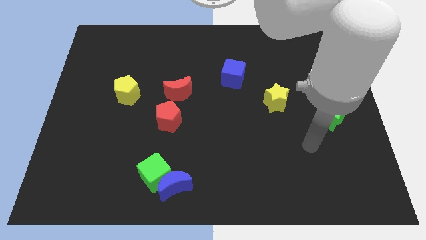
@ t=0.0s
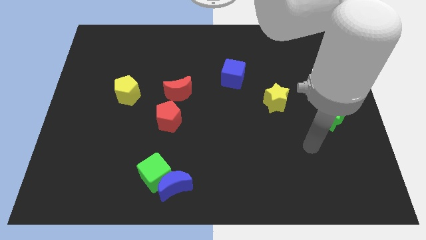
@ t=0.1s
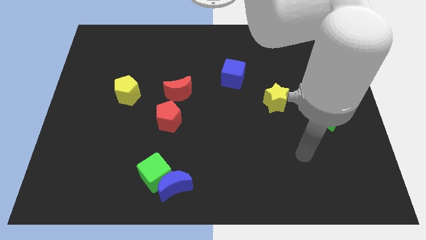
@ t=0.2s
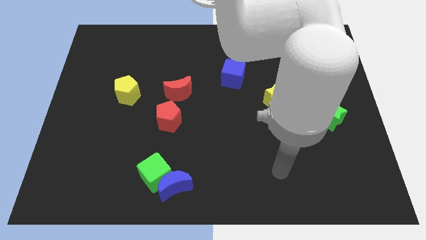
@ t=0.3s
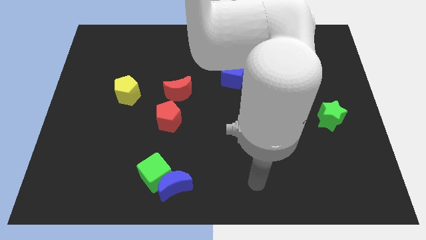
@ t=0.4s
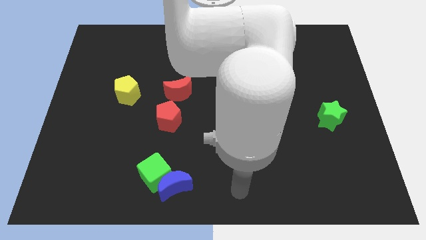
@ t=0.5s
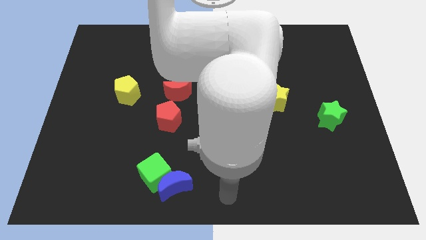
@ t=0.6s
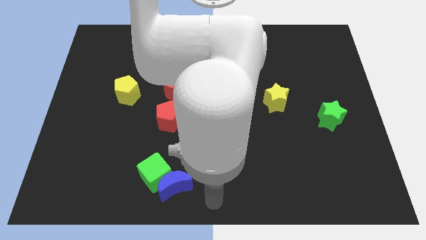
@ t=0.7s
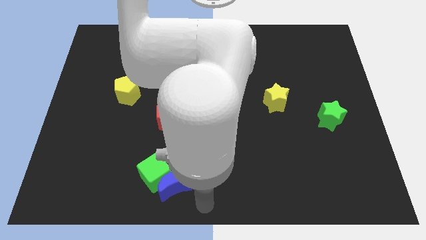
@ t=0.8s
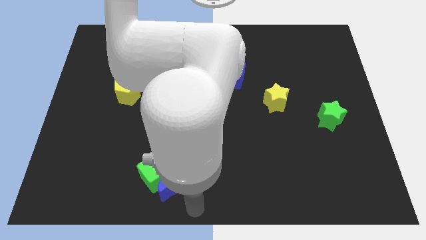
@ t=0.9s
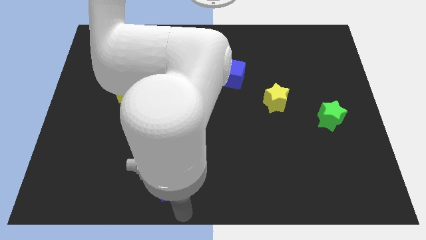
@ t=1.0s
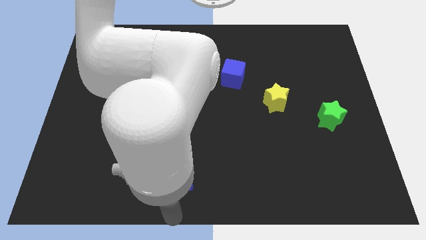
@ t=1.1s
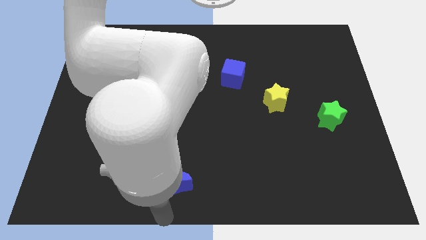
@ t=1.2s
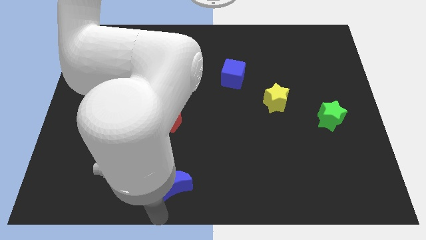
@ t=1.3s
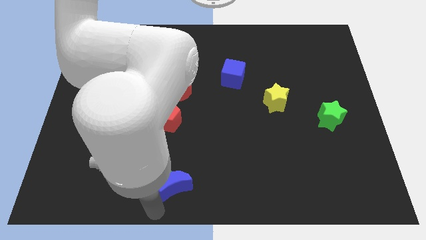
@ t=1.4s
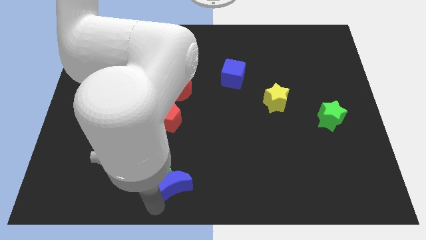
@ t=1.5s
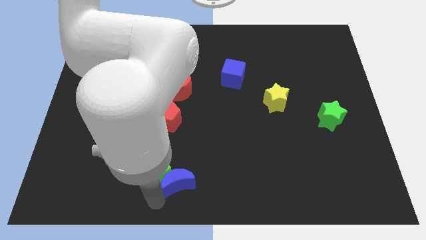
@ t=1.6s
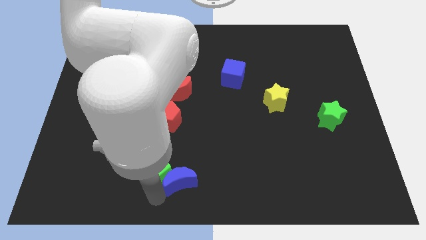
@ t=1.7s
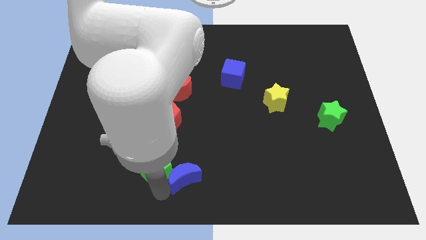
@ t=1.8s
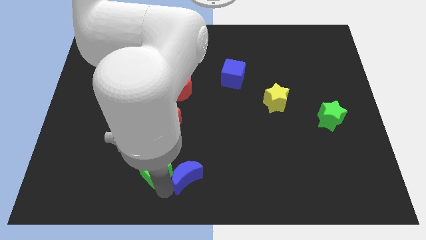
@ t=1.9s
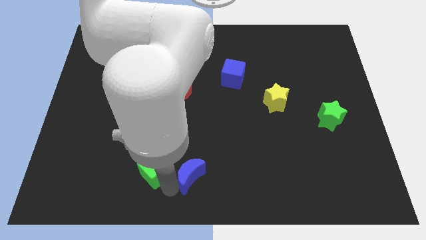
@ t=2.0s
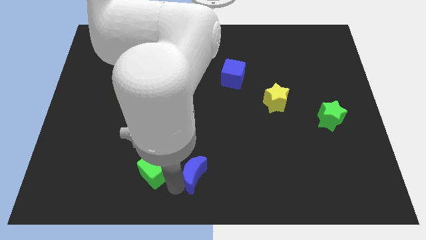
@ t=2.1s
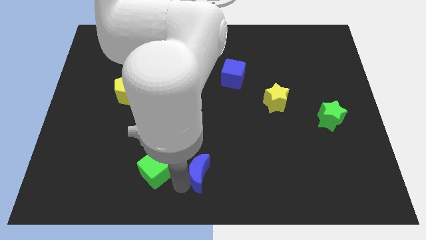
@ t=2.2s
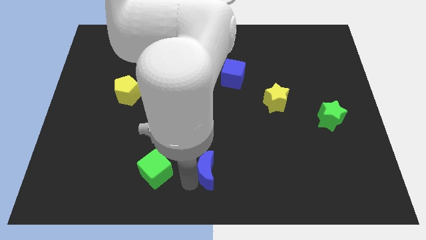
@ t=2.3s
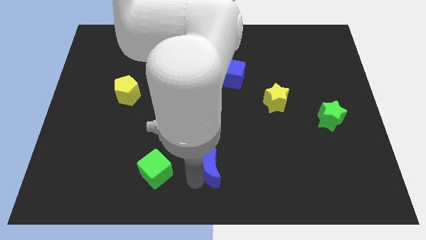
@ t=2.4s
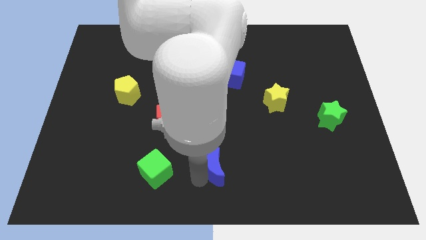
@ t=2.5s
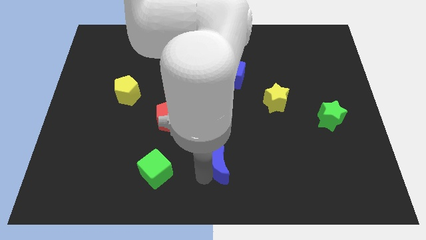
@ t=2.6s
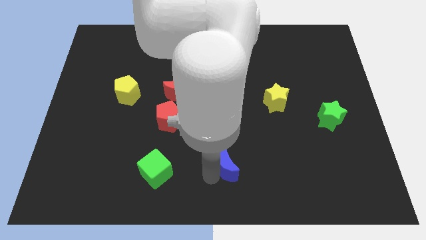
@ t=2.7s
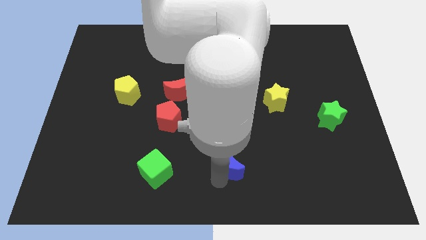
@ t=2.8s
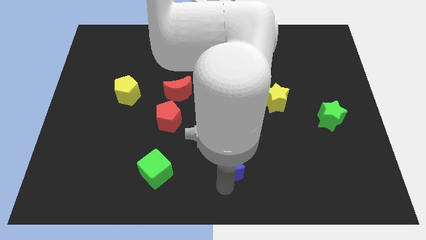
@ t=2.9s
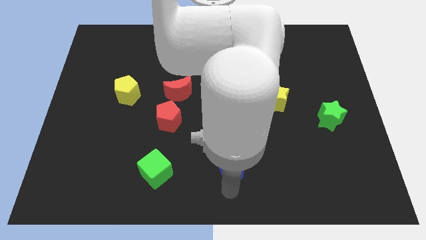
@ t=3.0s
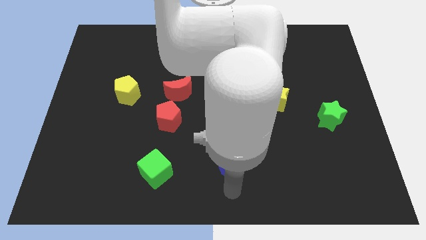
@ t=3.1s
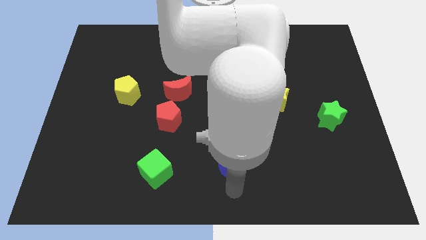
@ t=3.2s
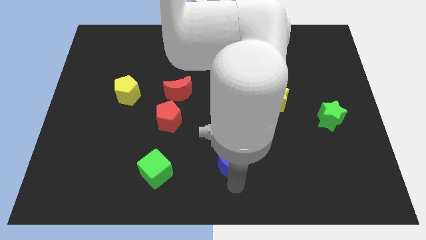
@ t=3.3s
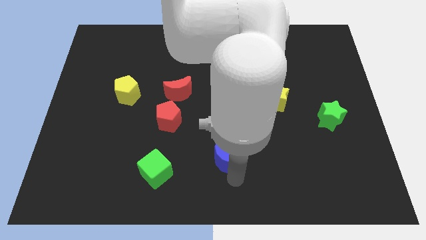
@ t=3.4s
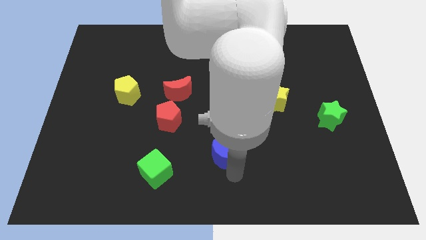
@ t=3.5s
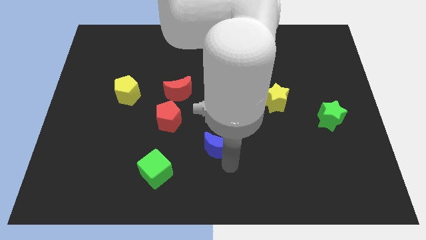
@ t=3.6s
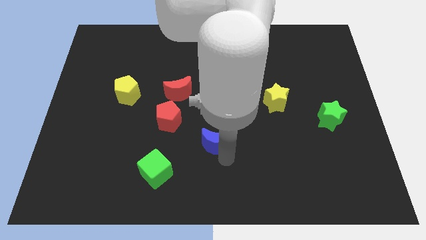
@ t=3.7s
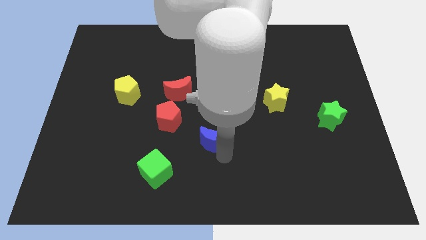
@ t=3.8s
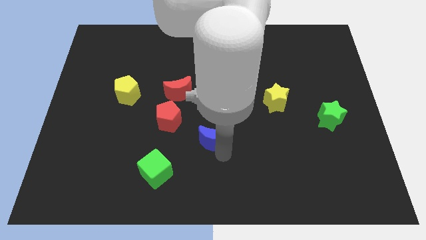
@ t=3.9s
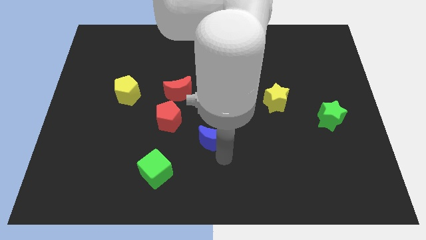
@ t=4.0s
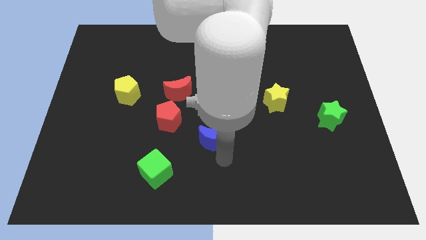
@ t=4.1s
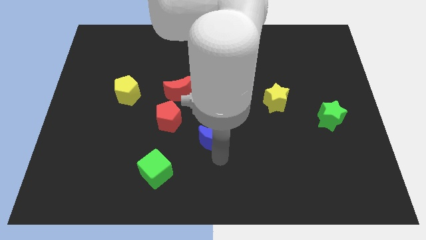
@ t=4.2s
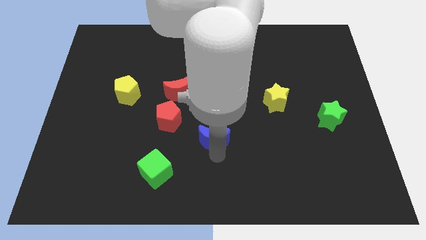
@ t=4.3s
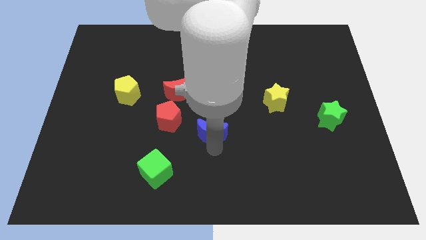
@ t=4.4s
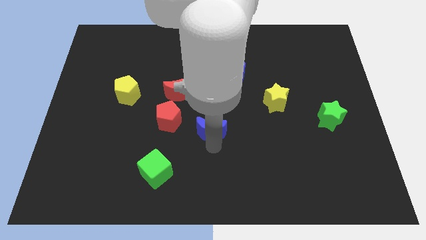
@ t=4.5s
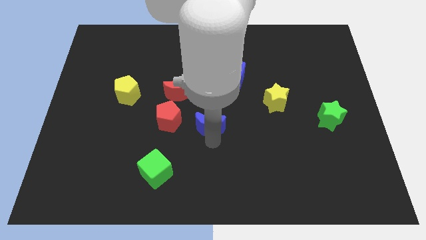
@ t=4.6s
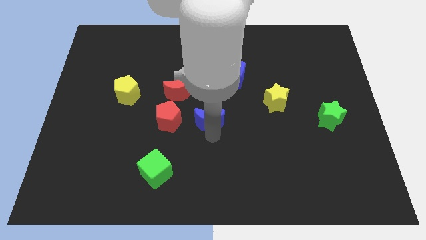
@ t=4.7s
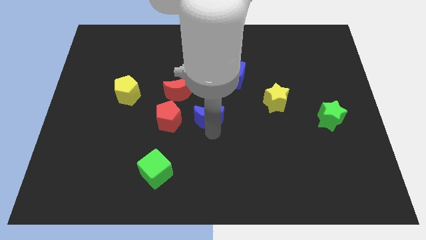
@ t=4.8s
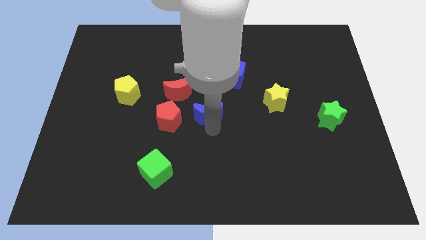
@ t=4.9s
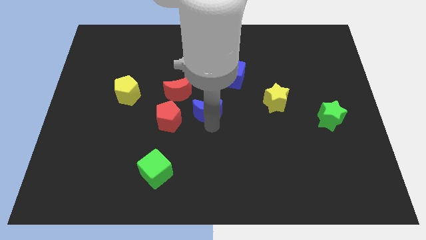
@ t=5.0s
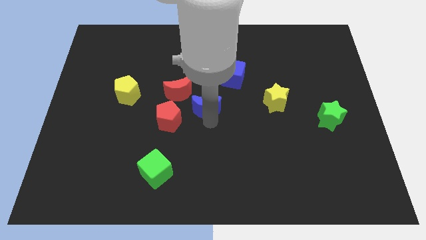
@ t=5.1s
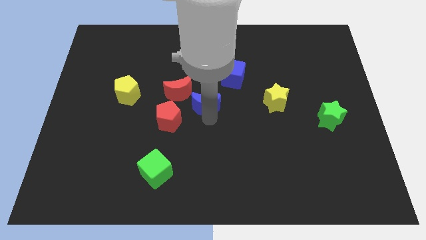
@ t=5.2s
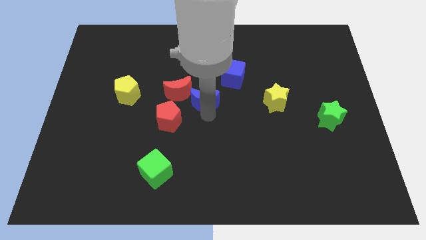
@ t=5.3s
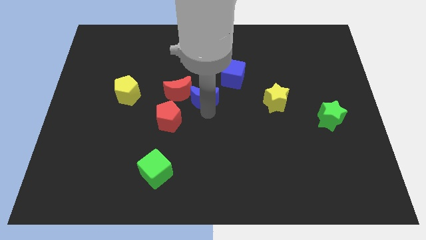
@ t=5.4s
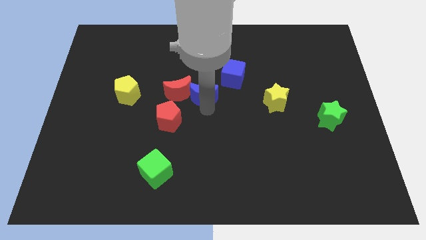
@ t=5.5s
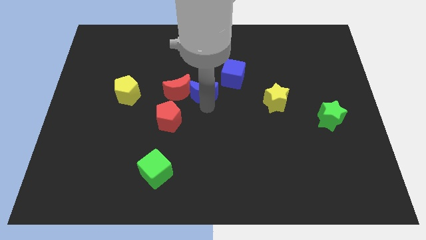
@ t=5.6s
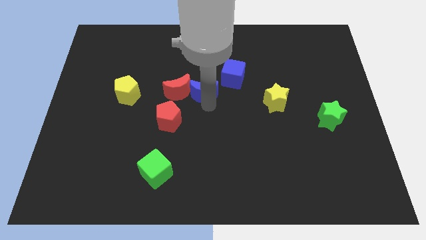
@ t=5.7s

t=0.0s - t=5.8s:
slide the blue moon towards the red moon

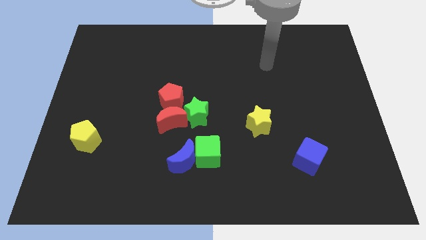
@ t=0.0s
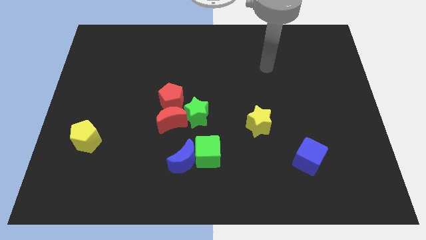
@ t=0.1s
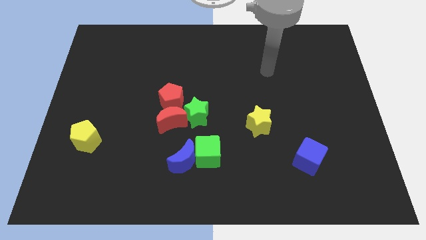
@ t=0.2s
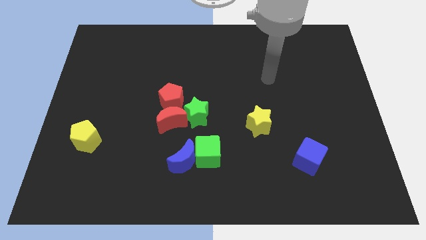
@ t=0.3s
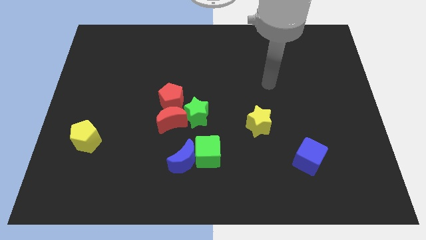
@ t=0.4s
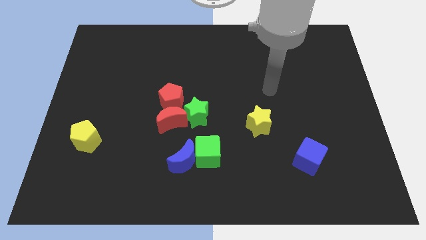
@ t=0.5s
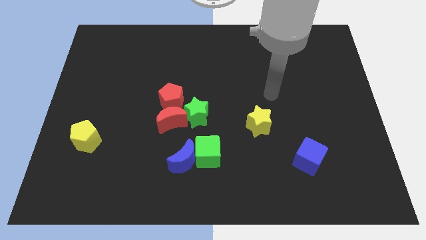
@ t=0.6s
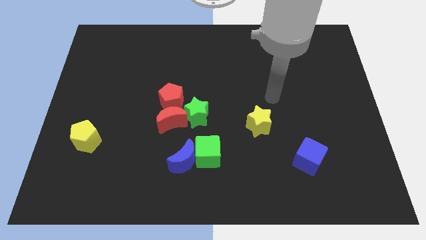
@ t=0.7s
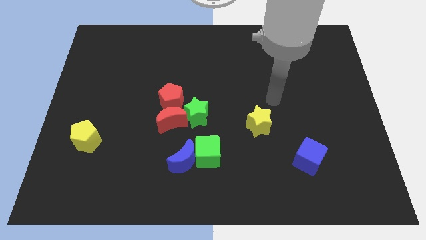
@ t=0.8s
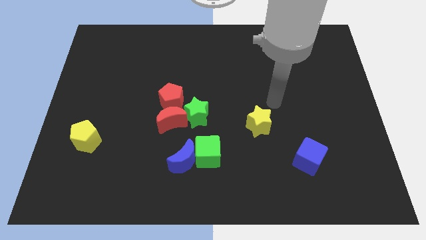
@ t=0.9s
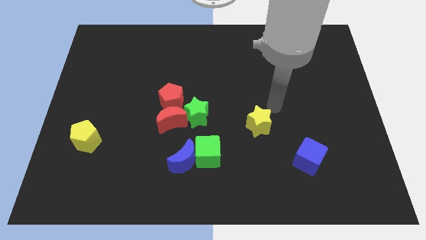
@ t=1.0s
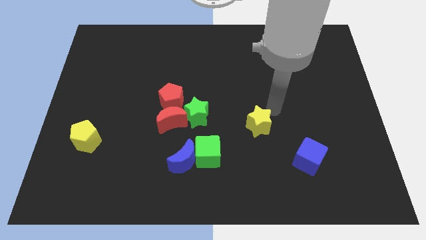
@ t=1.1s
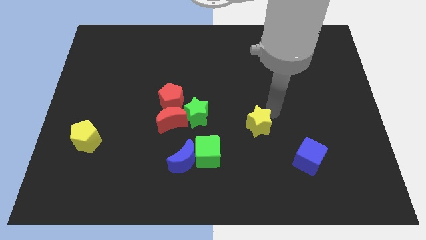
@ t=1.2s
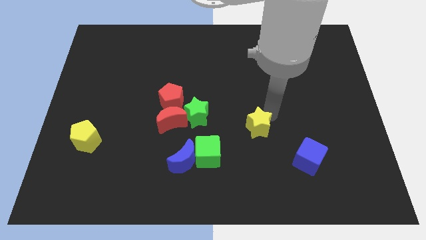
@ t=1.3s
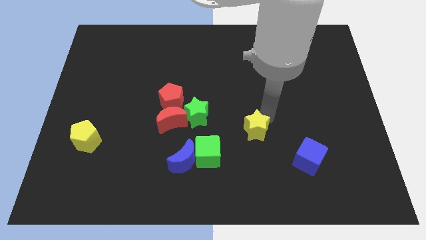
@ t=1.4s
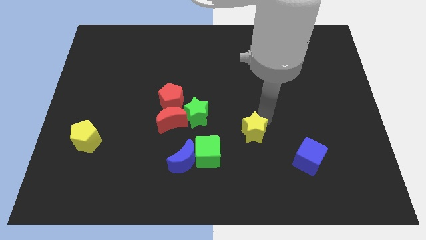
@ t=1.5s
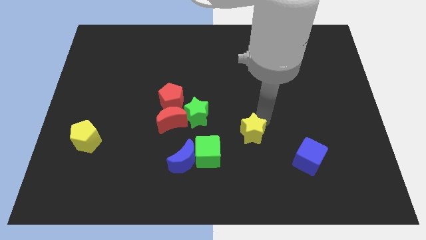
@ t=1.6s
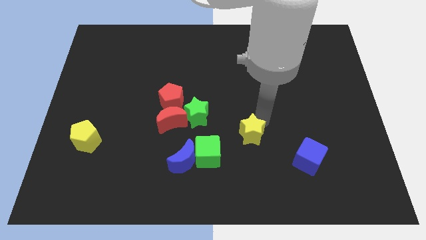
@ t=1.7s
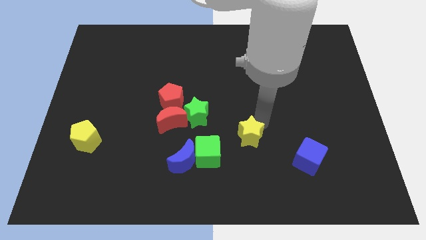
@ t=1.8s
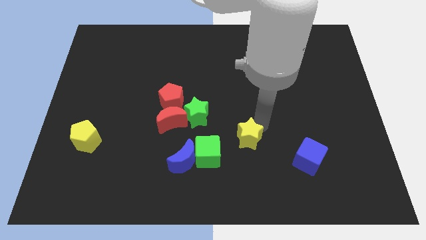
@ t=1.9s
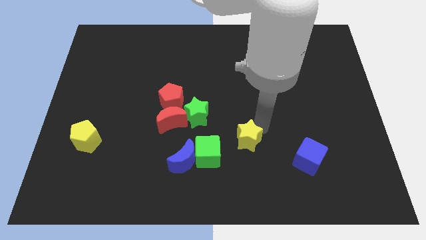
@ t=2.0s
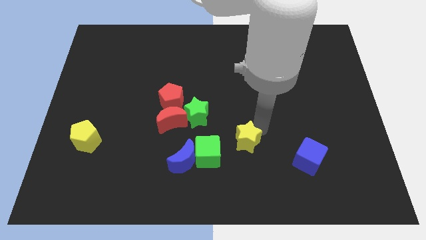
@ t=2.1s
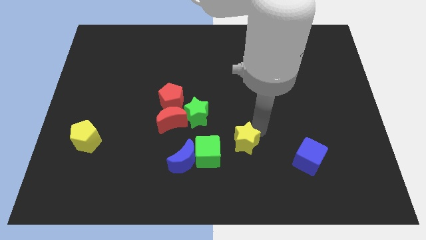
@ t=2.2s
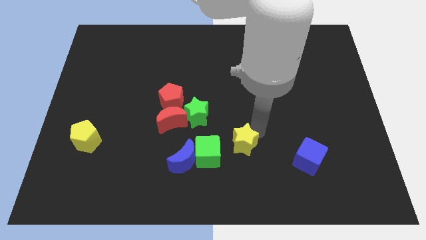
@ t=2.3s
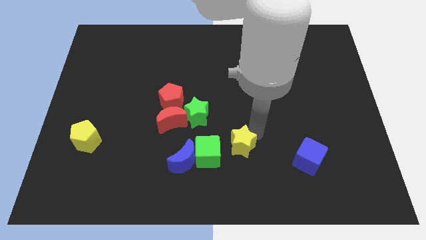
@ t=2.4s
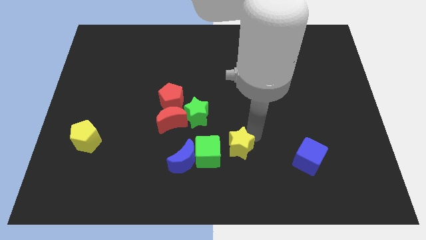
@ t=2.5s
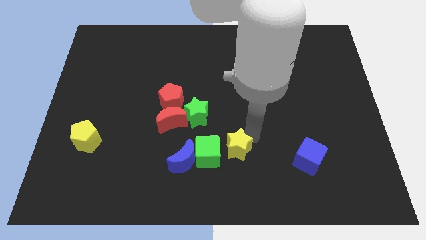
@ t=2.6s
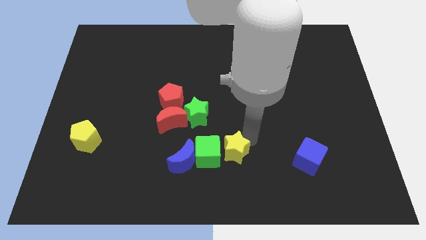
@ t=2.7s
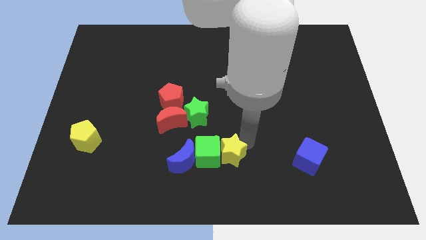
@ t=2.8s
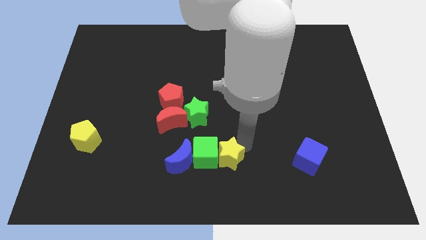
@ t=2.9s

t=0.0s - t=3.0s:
push the yellow star to the green cube
